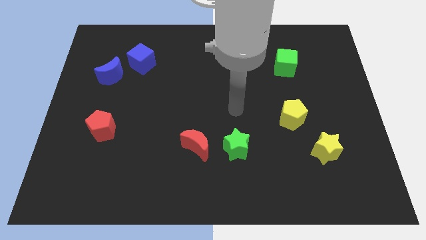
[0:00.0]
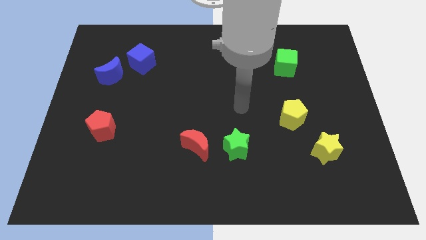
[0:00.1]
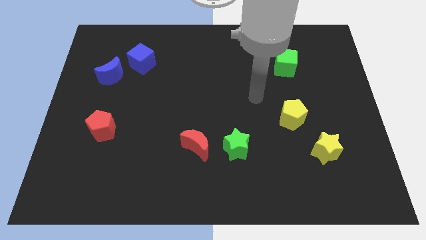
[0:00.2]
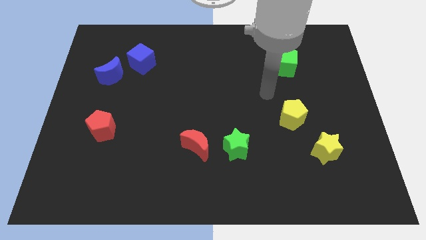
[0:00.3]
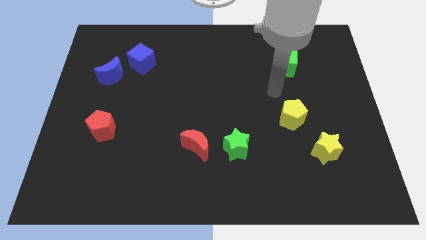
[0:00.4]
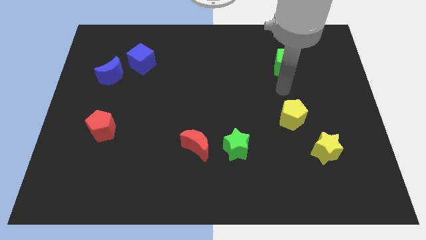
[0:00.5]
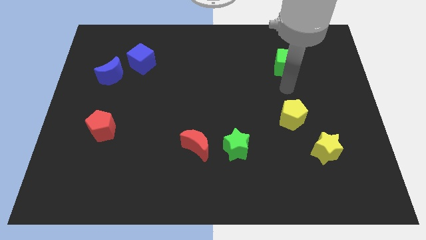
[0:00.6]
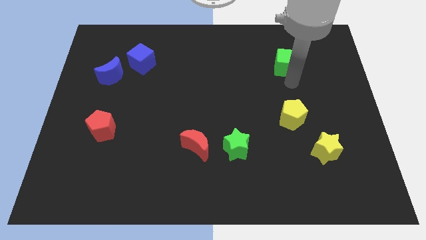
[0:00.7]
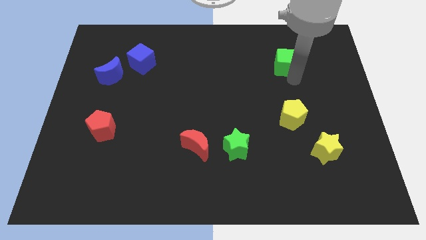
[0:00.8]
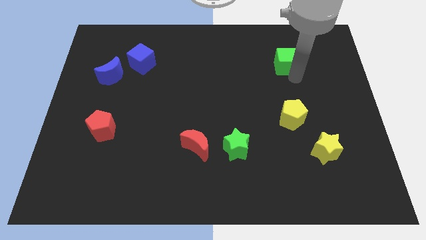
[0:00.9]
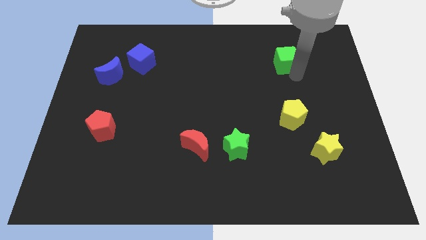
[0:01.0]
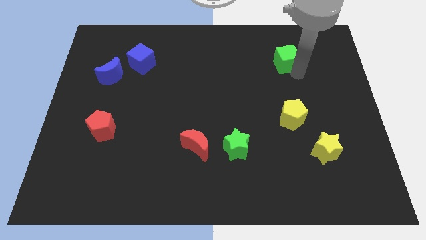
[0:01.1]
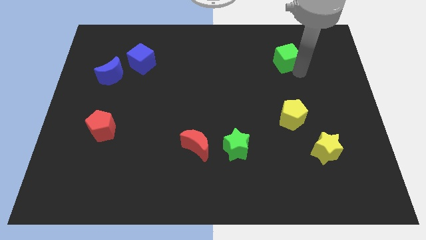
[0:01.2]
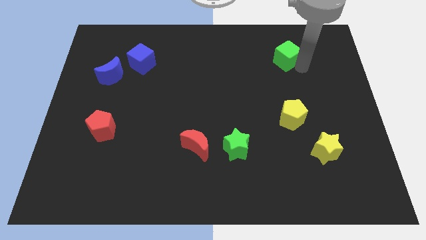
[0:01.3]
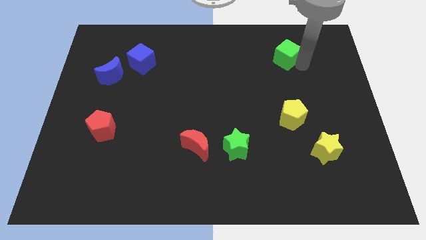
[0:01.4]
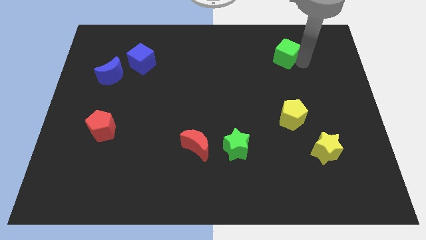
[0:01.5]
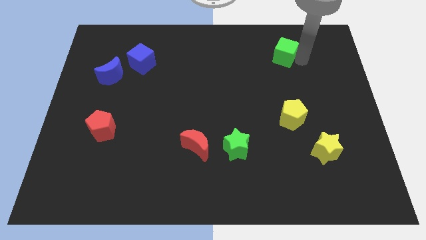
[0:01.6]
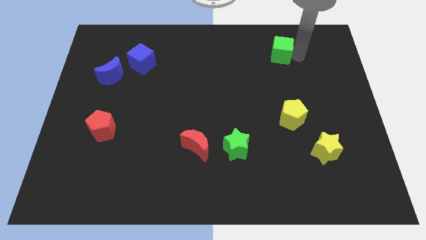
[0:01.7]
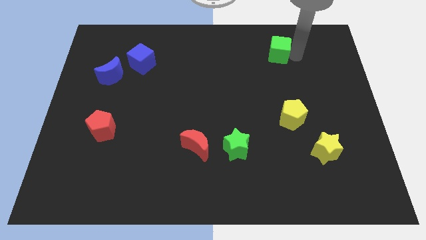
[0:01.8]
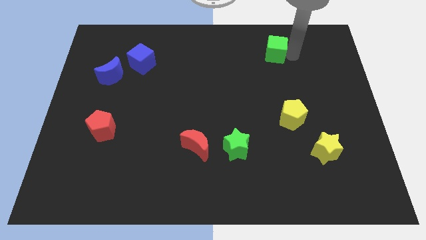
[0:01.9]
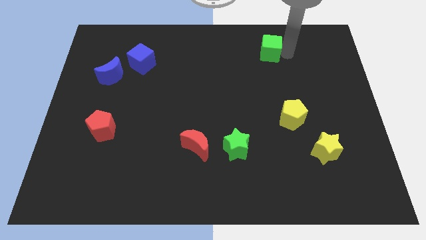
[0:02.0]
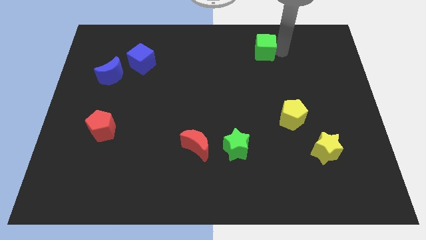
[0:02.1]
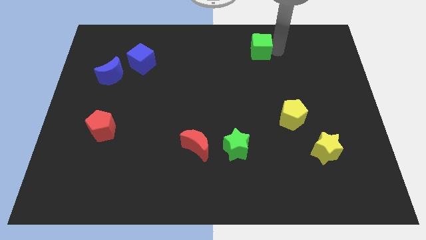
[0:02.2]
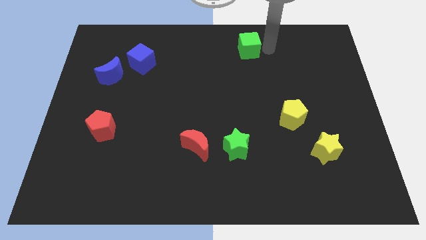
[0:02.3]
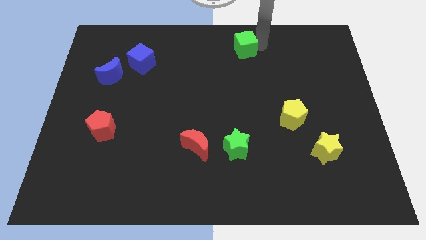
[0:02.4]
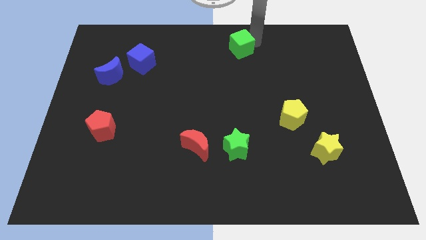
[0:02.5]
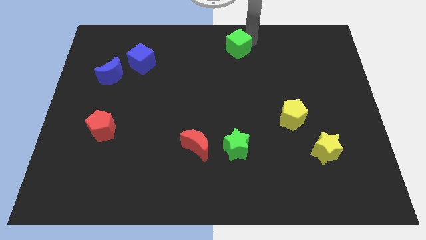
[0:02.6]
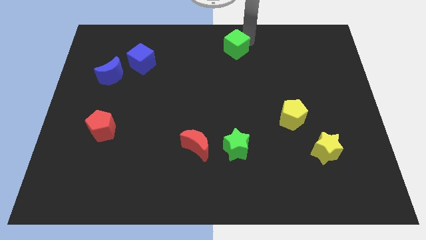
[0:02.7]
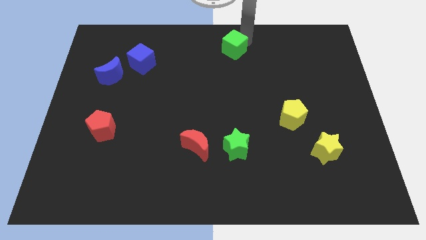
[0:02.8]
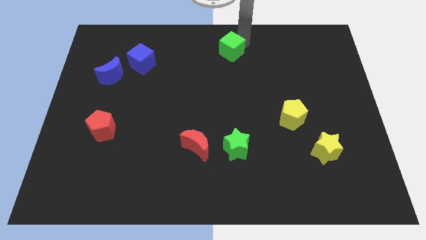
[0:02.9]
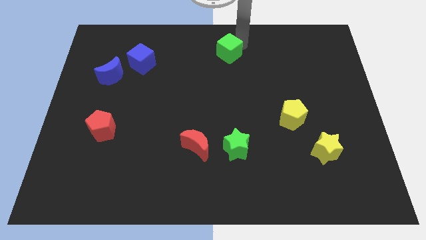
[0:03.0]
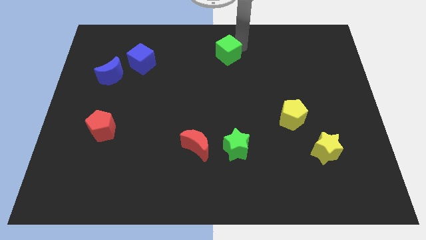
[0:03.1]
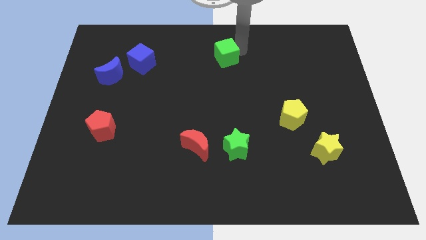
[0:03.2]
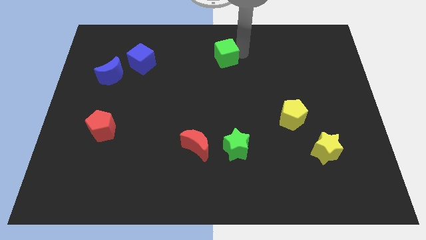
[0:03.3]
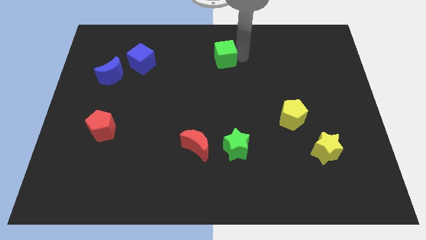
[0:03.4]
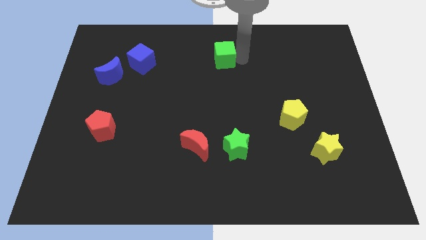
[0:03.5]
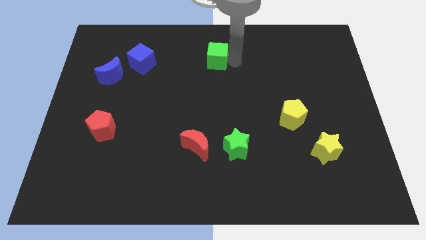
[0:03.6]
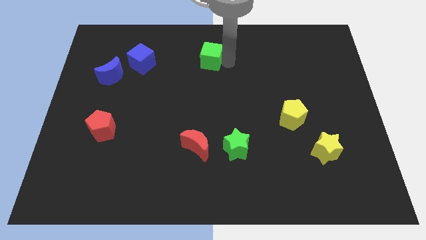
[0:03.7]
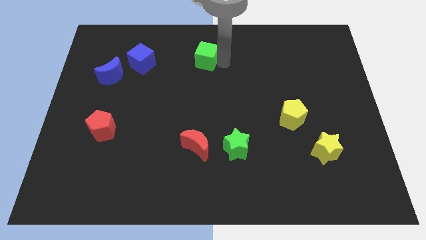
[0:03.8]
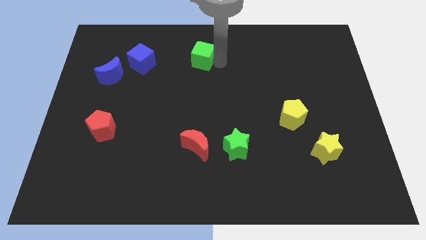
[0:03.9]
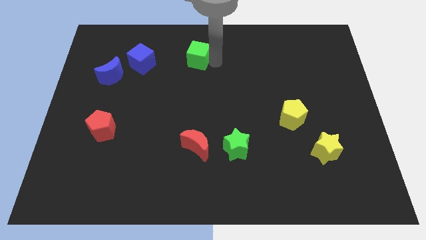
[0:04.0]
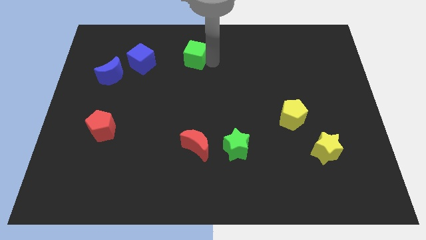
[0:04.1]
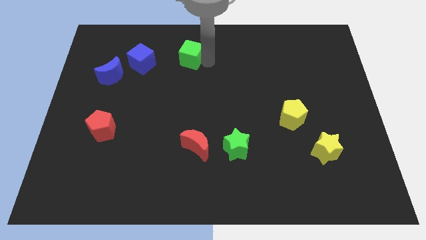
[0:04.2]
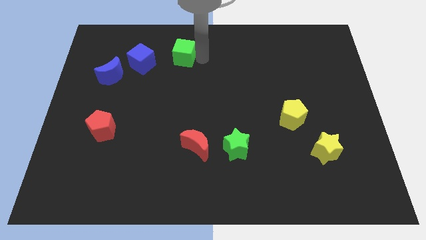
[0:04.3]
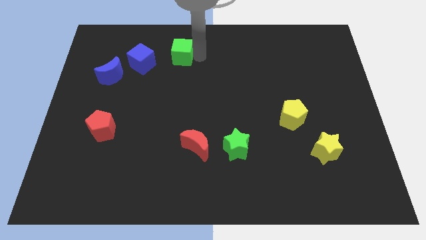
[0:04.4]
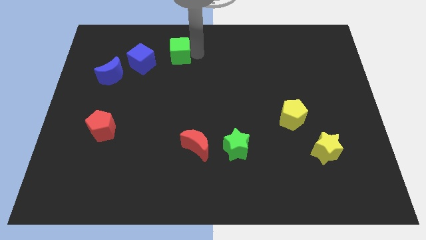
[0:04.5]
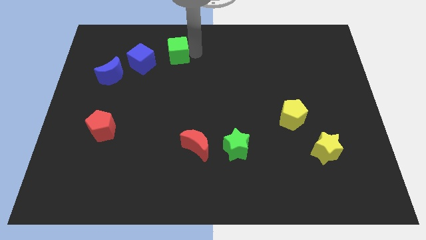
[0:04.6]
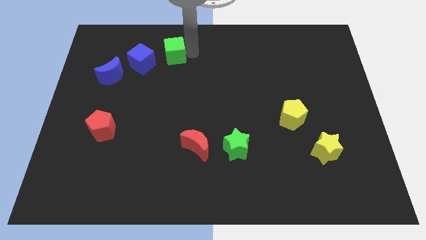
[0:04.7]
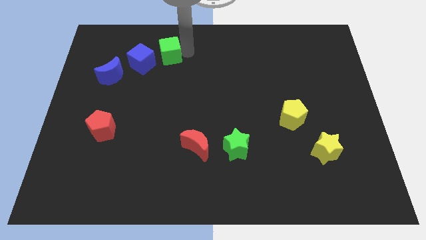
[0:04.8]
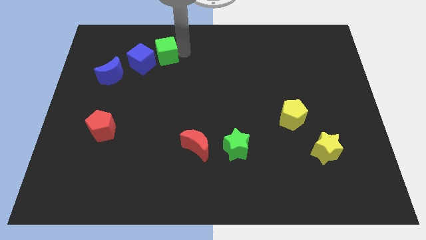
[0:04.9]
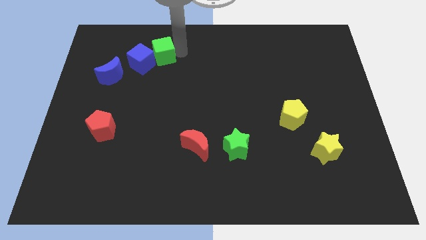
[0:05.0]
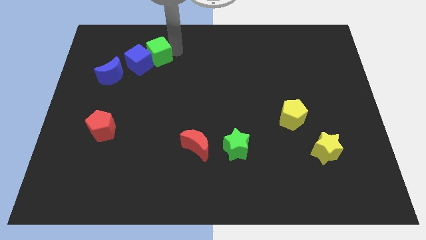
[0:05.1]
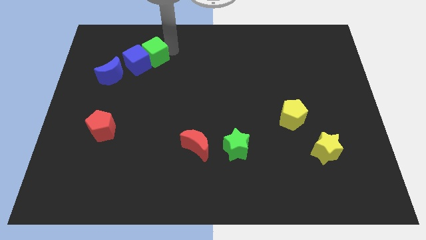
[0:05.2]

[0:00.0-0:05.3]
move the green cube to the blue cube

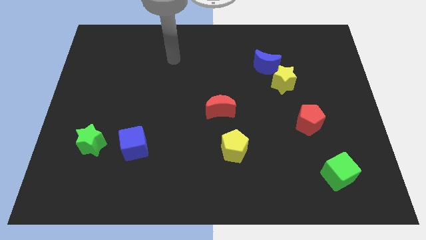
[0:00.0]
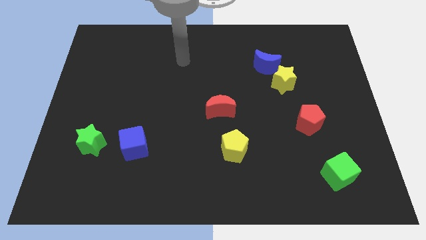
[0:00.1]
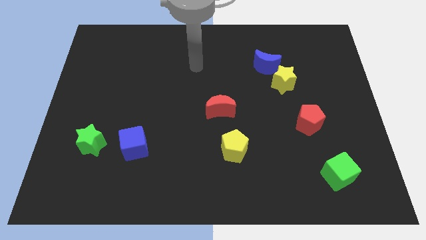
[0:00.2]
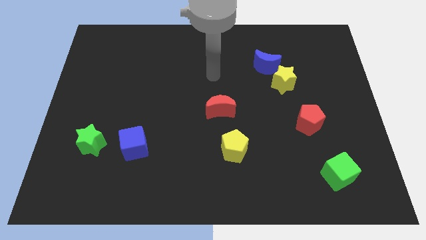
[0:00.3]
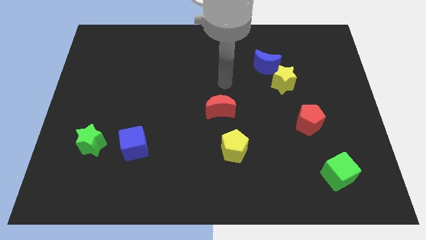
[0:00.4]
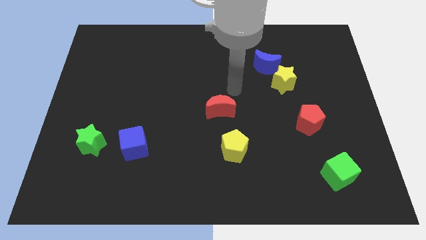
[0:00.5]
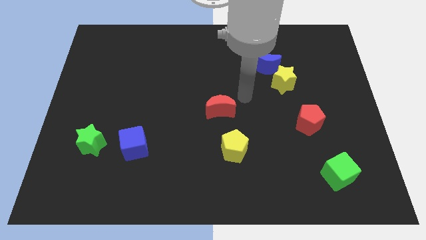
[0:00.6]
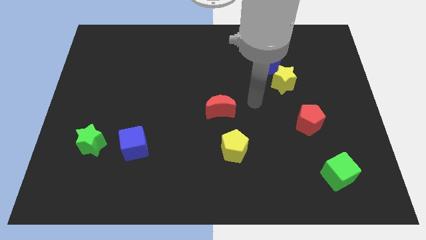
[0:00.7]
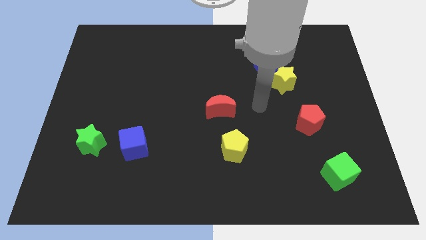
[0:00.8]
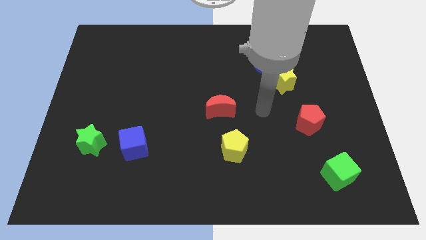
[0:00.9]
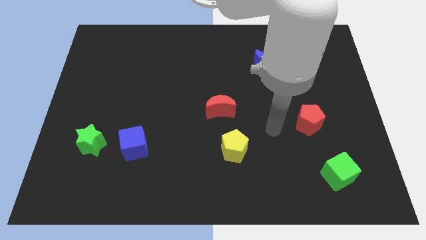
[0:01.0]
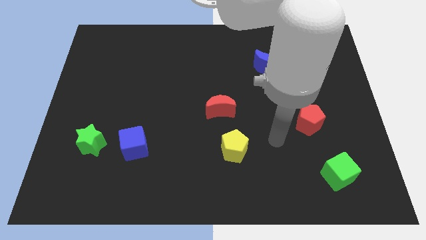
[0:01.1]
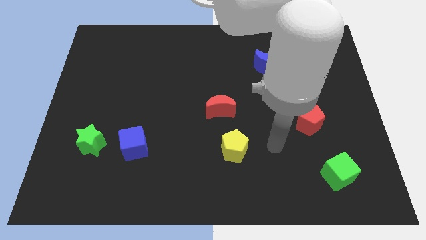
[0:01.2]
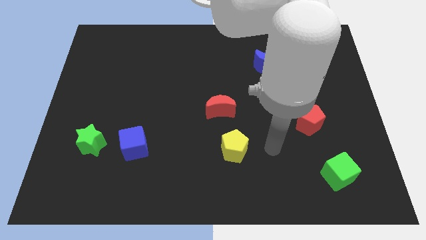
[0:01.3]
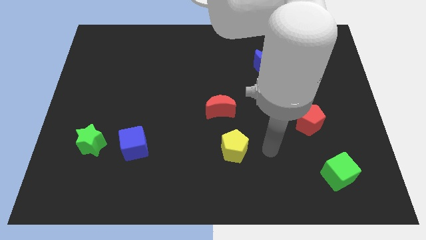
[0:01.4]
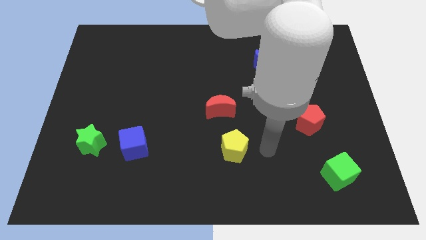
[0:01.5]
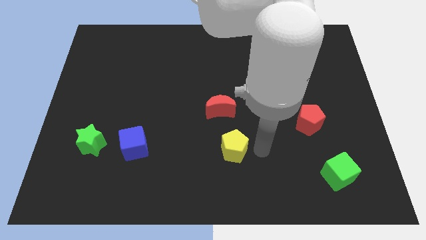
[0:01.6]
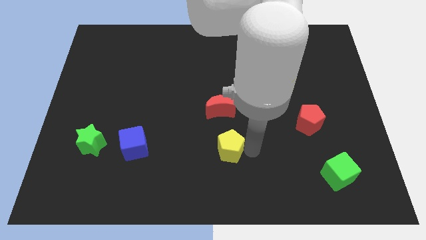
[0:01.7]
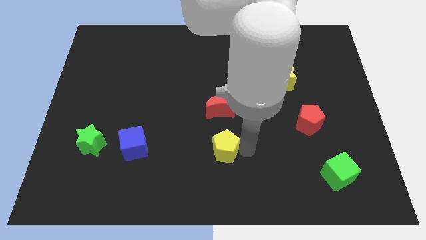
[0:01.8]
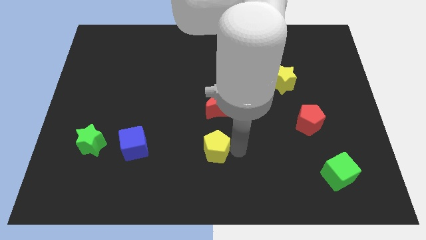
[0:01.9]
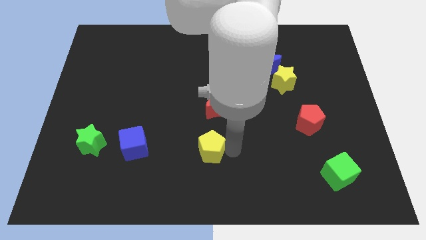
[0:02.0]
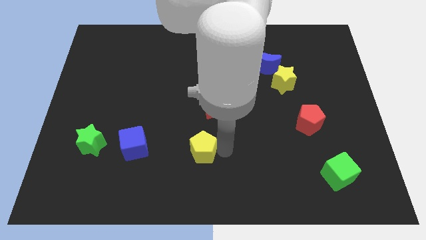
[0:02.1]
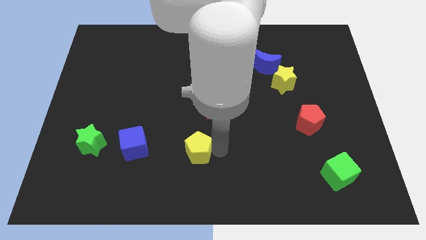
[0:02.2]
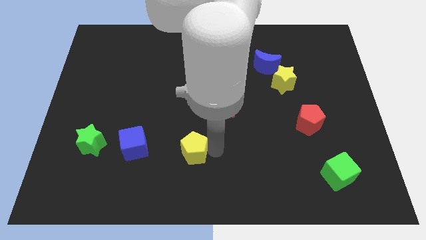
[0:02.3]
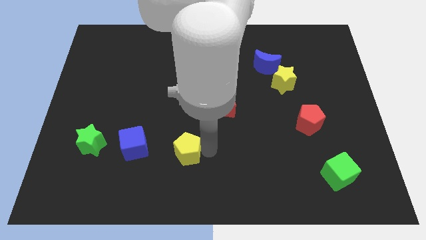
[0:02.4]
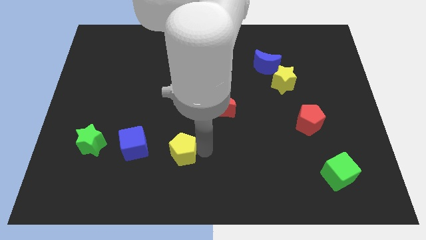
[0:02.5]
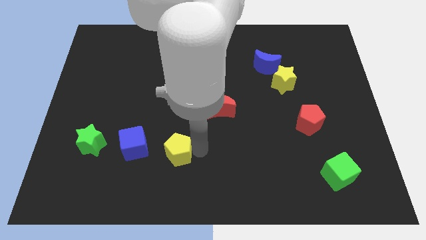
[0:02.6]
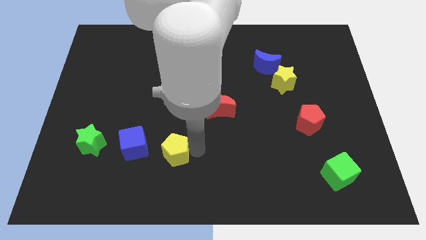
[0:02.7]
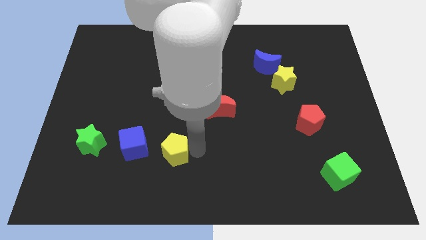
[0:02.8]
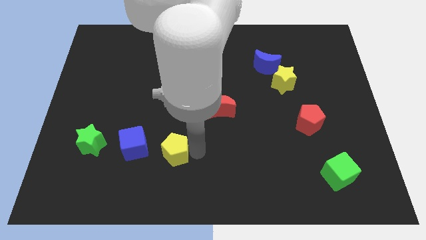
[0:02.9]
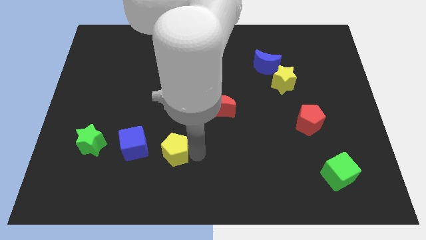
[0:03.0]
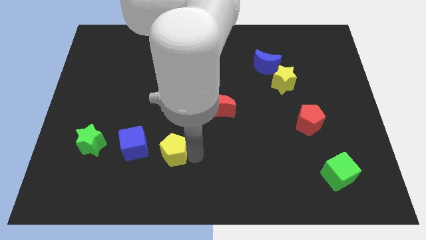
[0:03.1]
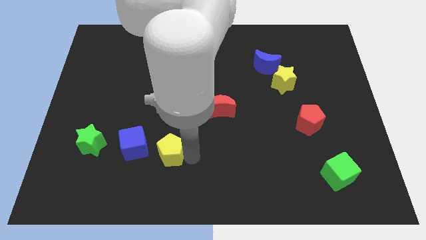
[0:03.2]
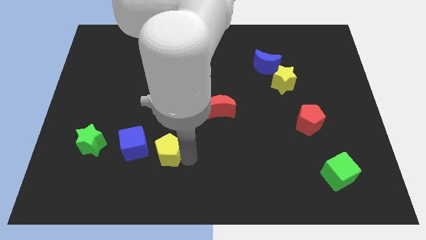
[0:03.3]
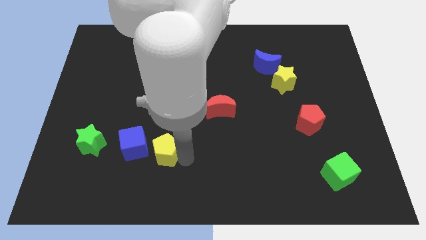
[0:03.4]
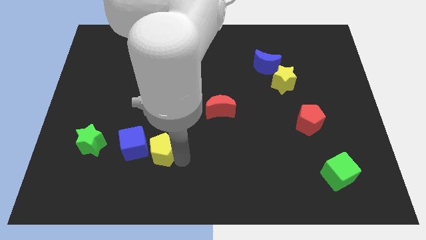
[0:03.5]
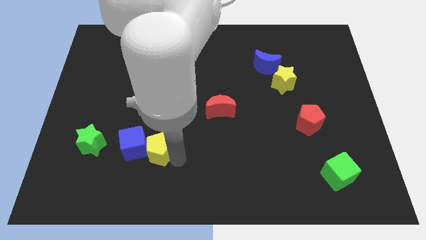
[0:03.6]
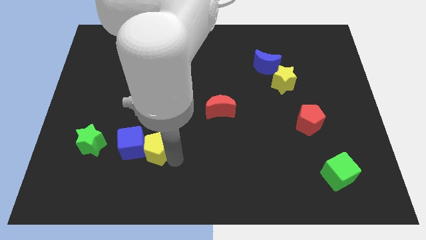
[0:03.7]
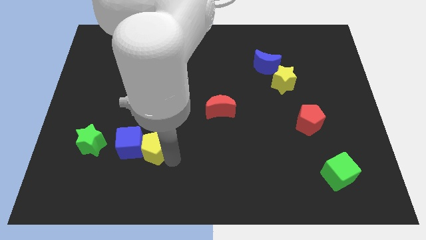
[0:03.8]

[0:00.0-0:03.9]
put the yellow pentagon towards the blue cube
